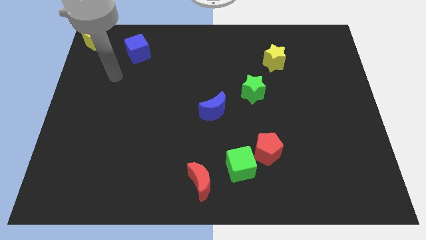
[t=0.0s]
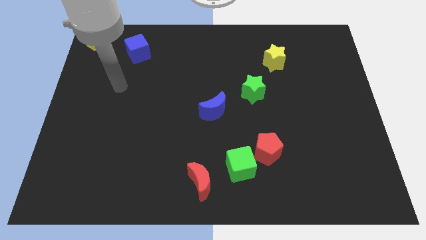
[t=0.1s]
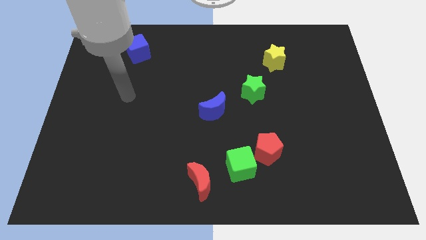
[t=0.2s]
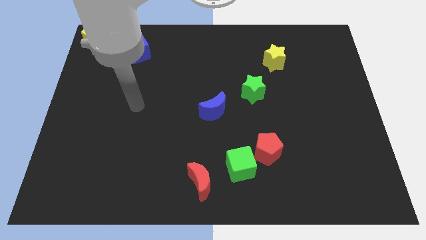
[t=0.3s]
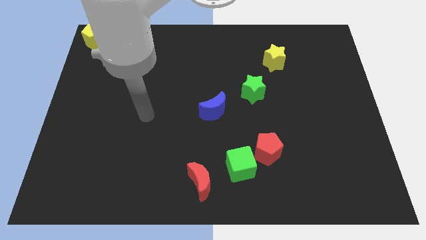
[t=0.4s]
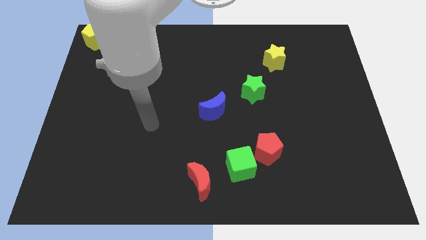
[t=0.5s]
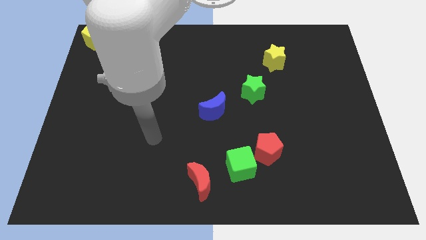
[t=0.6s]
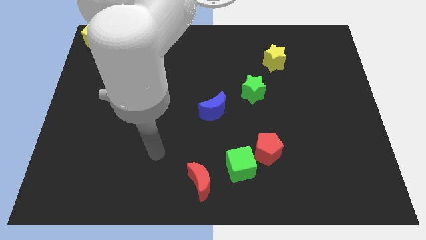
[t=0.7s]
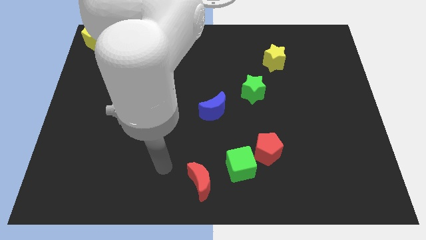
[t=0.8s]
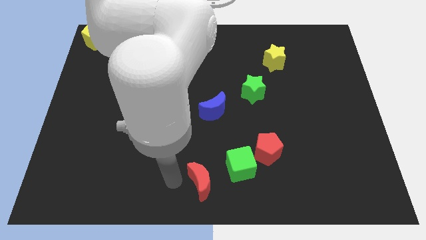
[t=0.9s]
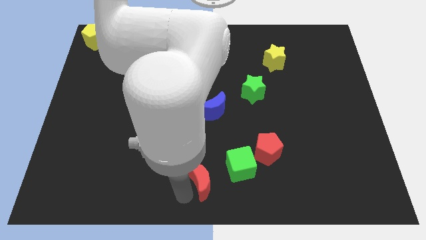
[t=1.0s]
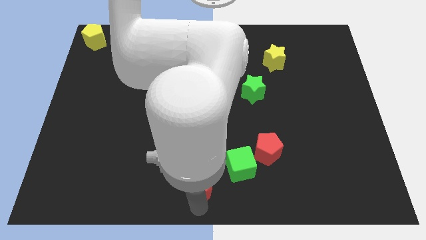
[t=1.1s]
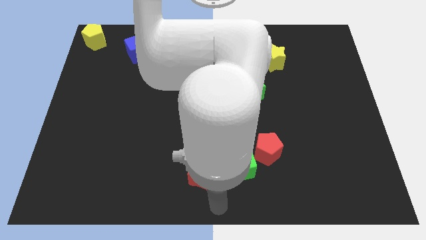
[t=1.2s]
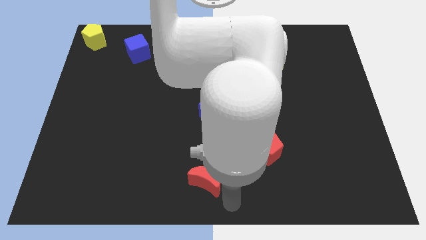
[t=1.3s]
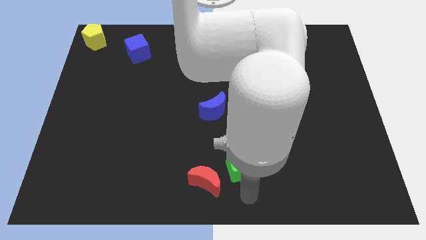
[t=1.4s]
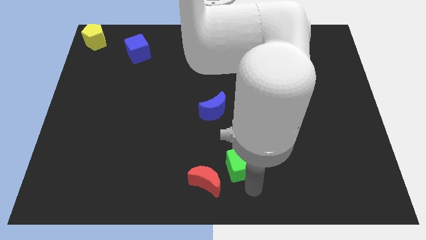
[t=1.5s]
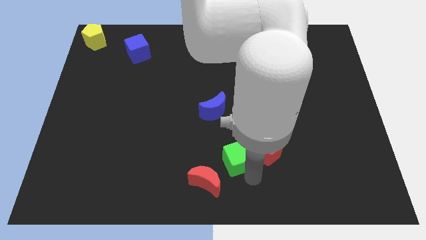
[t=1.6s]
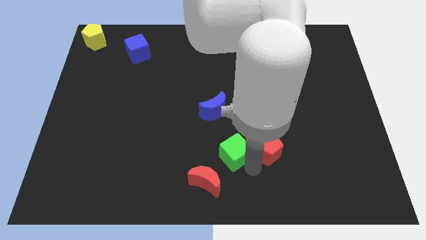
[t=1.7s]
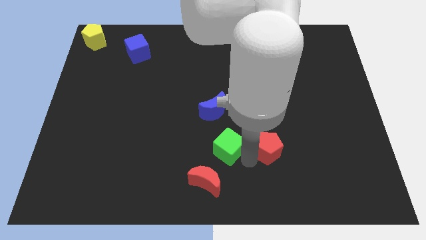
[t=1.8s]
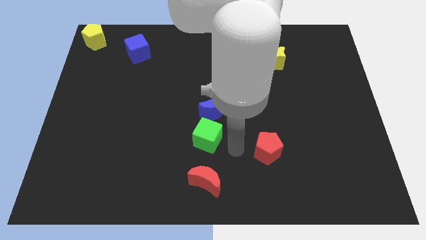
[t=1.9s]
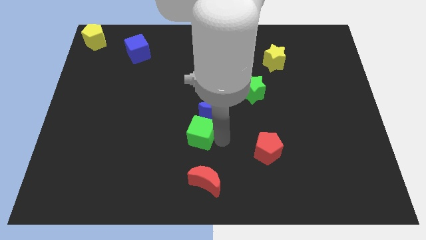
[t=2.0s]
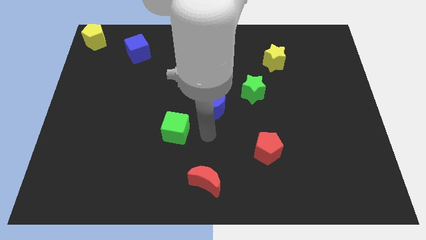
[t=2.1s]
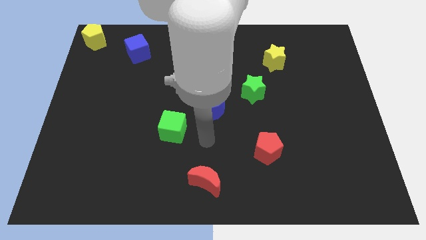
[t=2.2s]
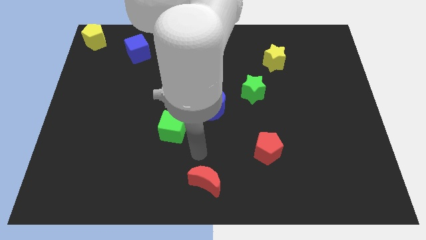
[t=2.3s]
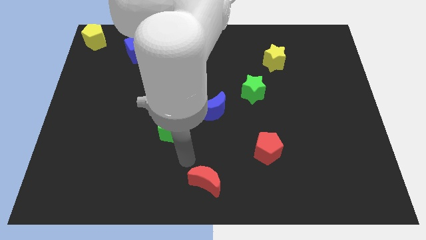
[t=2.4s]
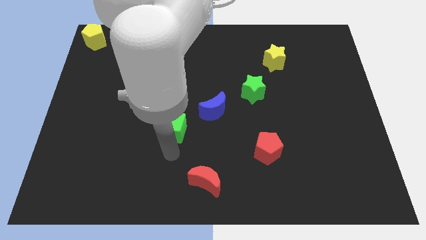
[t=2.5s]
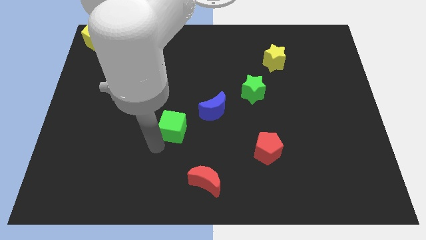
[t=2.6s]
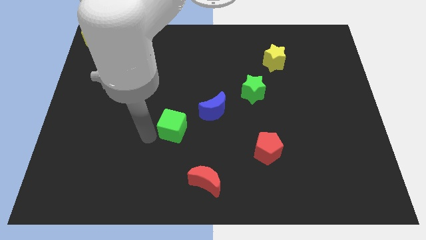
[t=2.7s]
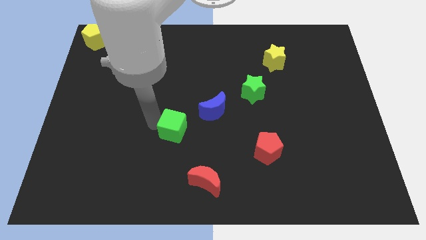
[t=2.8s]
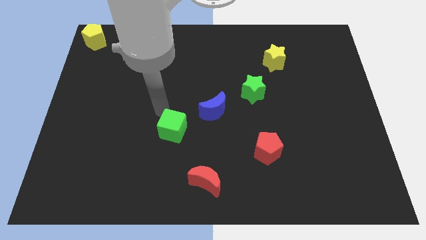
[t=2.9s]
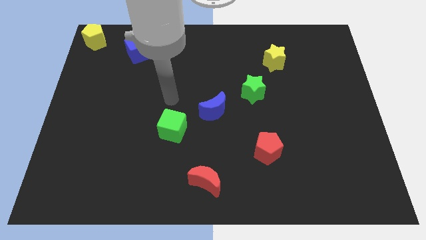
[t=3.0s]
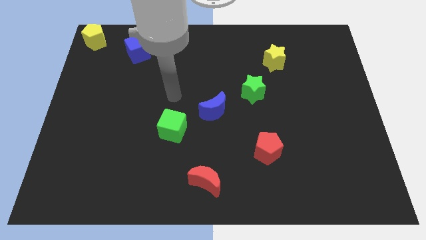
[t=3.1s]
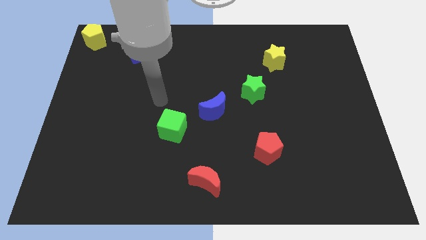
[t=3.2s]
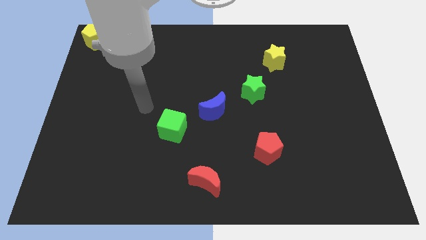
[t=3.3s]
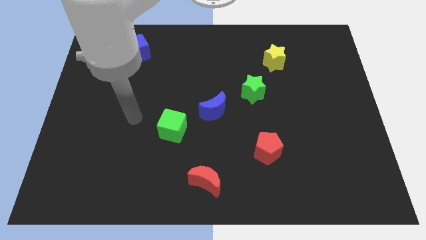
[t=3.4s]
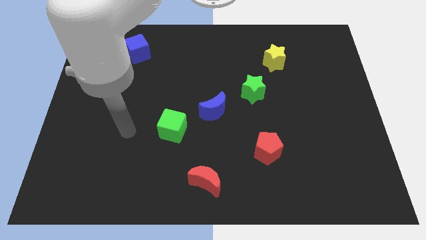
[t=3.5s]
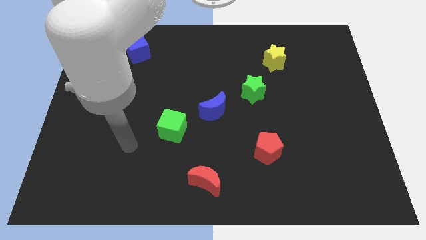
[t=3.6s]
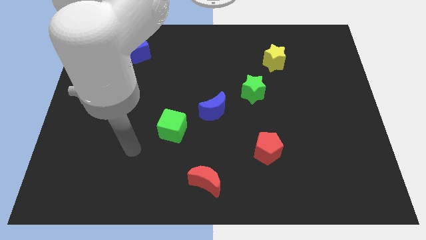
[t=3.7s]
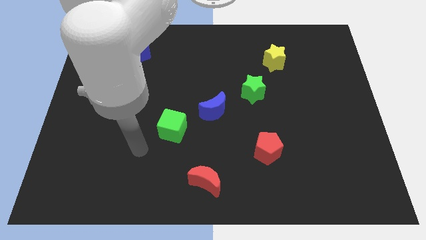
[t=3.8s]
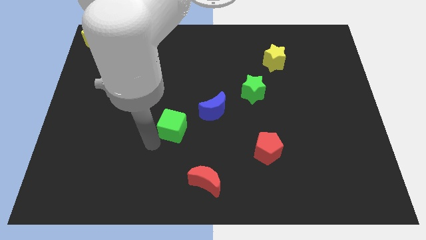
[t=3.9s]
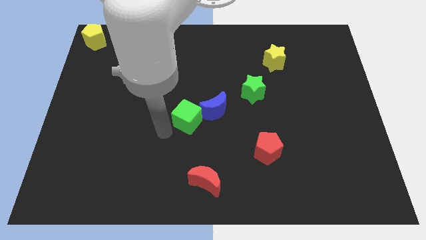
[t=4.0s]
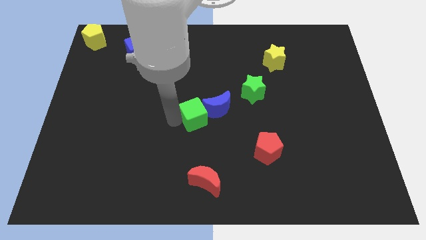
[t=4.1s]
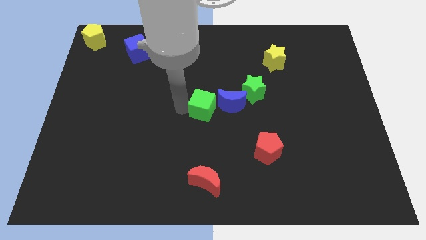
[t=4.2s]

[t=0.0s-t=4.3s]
put the green cube into the blue moon

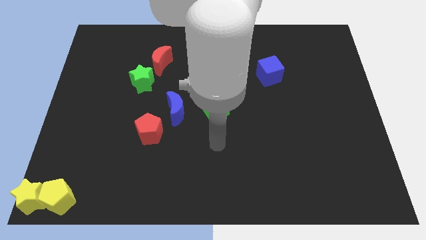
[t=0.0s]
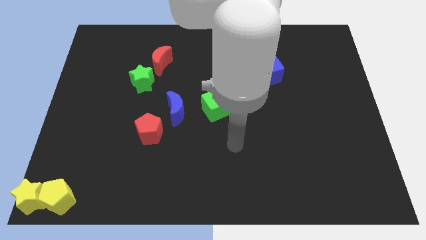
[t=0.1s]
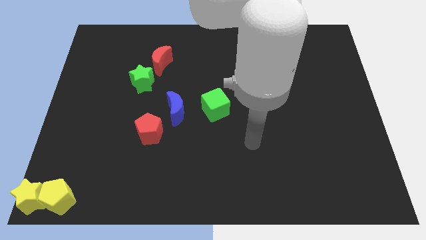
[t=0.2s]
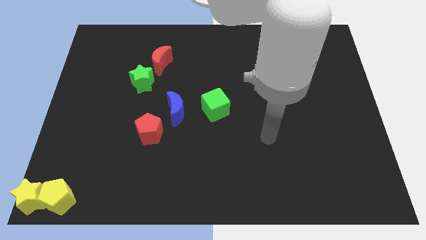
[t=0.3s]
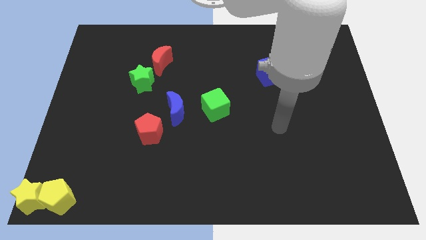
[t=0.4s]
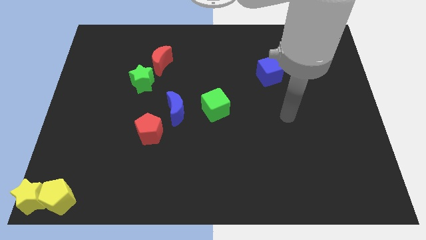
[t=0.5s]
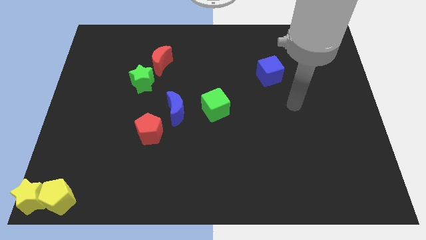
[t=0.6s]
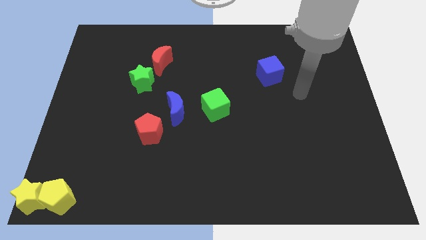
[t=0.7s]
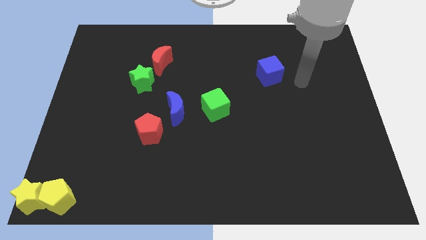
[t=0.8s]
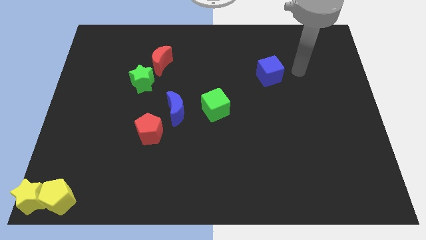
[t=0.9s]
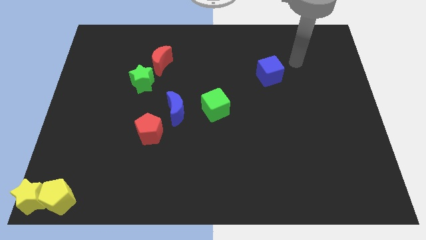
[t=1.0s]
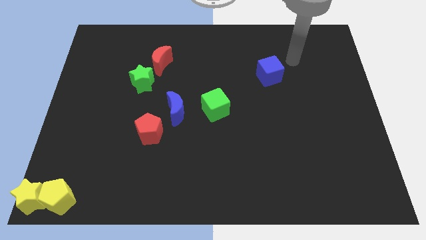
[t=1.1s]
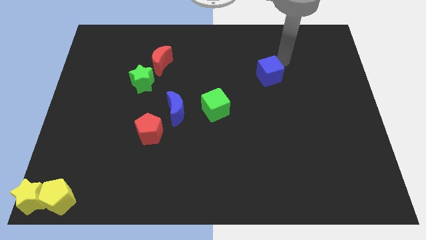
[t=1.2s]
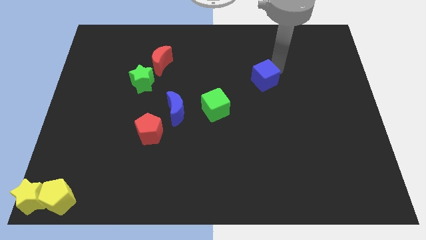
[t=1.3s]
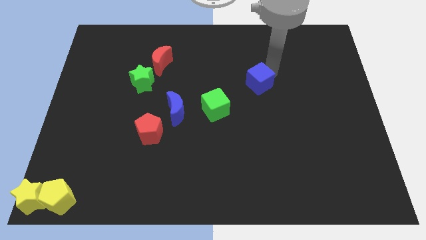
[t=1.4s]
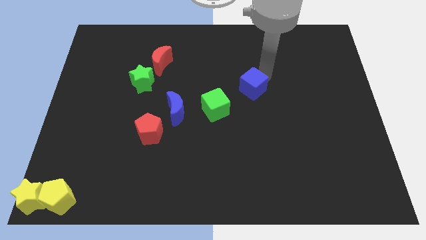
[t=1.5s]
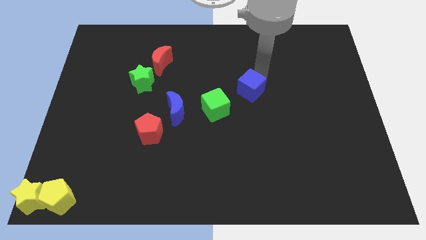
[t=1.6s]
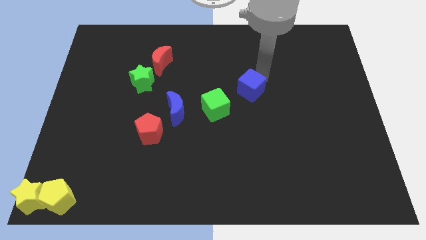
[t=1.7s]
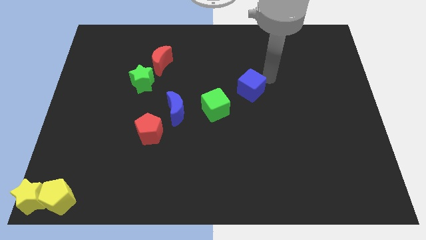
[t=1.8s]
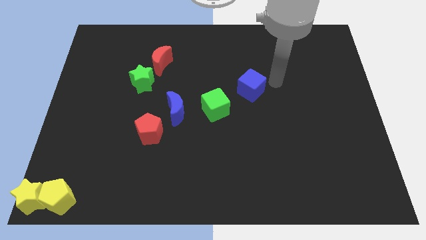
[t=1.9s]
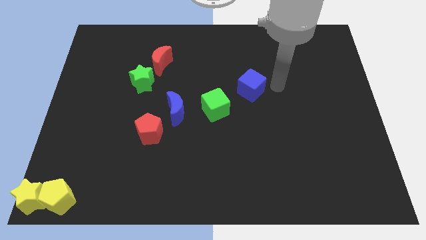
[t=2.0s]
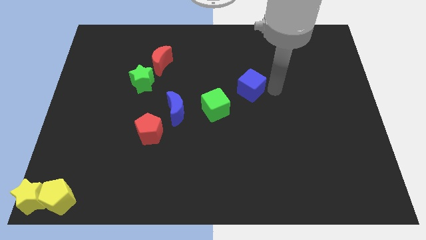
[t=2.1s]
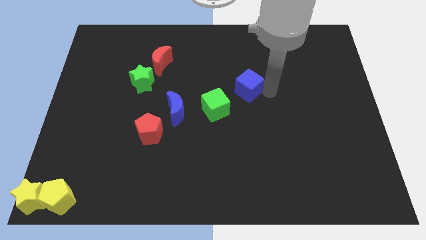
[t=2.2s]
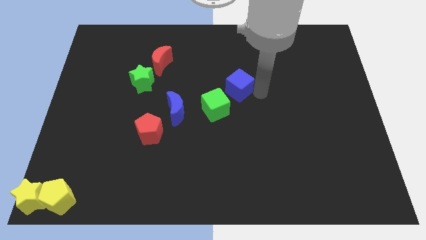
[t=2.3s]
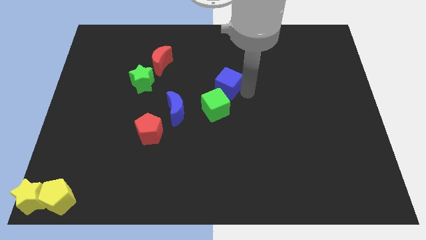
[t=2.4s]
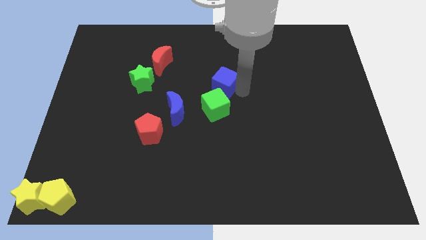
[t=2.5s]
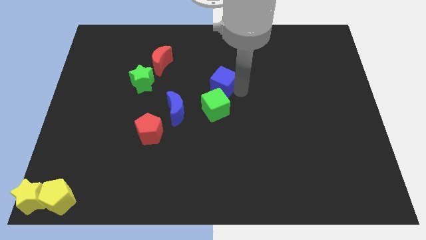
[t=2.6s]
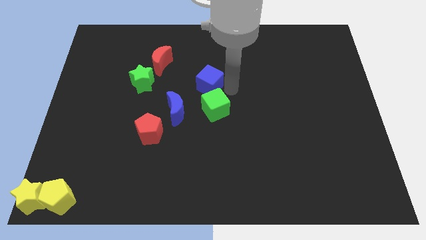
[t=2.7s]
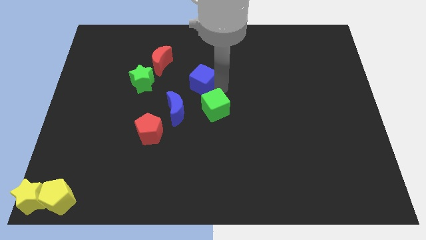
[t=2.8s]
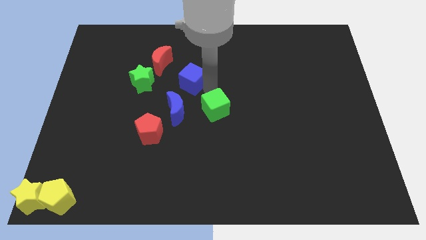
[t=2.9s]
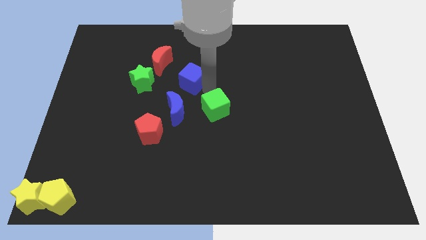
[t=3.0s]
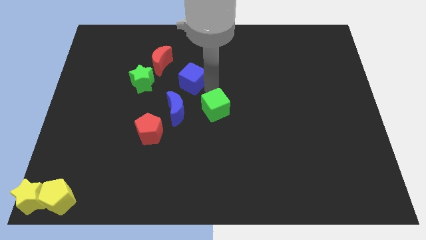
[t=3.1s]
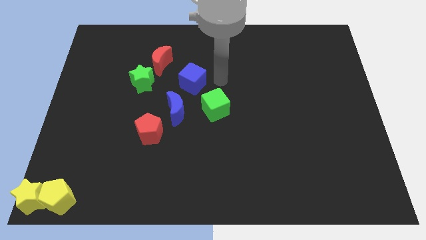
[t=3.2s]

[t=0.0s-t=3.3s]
move the blue cube diagonally in between the red crescent and the green cube

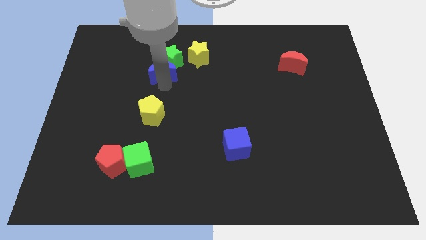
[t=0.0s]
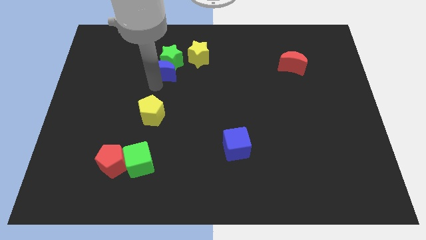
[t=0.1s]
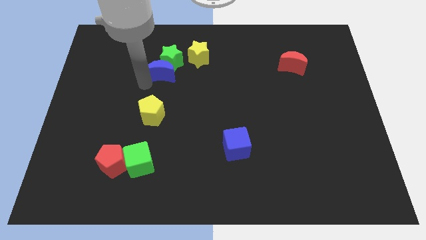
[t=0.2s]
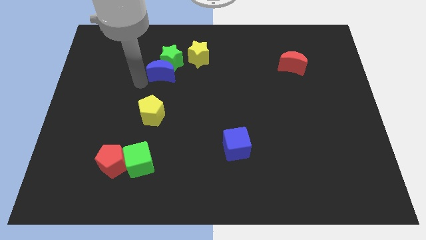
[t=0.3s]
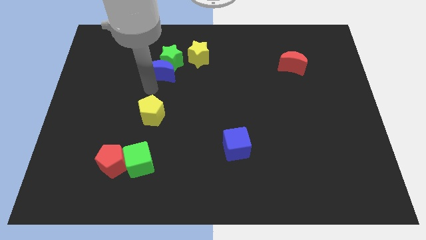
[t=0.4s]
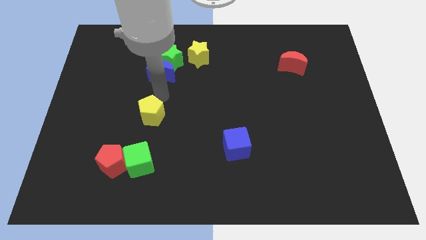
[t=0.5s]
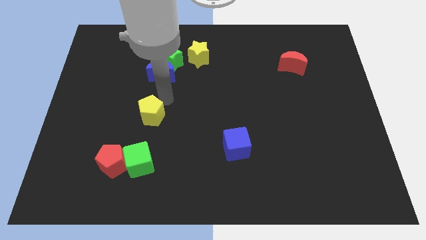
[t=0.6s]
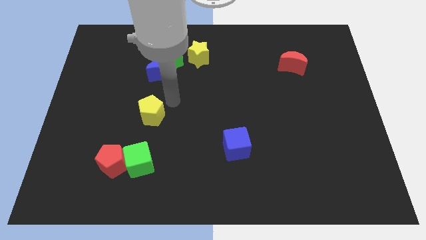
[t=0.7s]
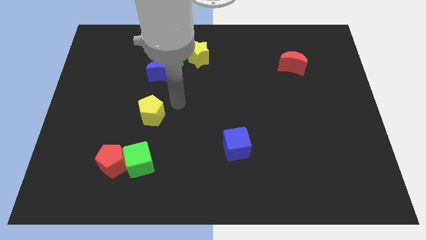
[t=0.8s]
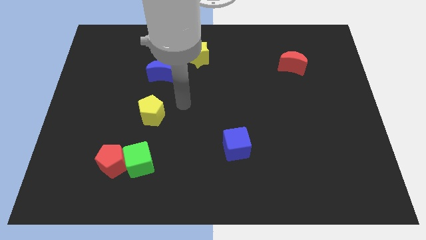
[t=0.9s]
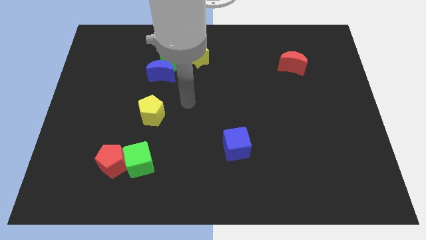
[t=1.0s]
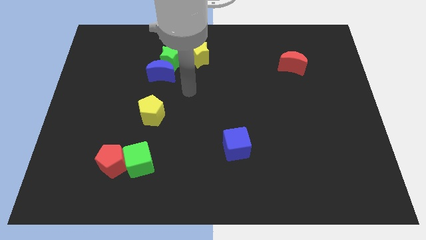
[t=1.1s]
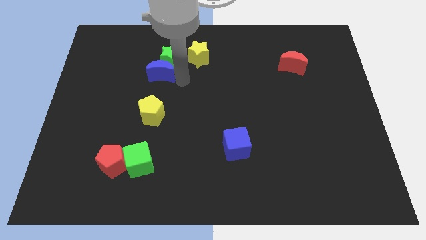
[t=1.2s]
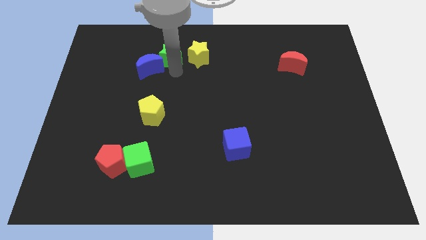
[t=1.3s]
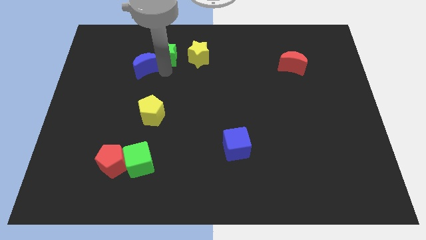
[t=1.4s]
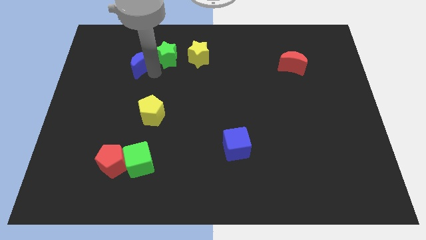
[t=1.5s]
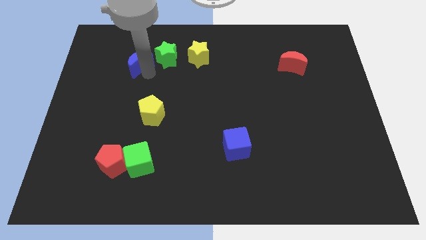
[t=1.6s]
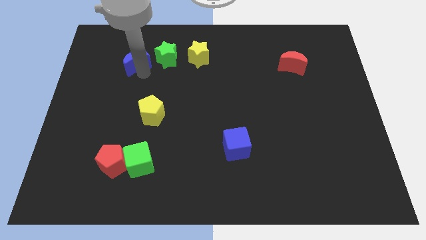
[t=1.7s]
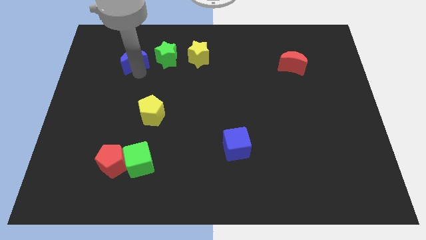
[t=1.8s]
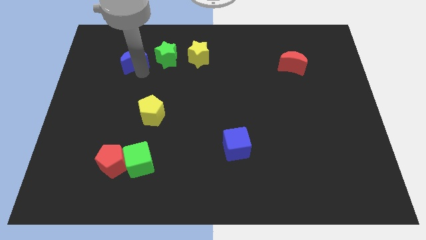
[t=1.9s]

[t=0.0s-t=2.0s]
push the blue crescent towards the left to the green star
